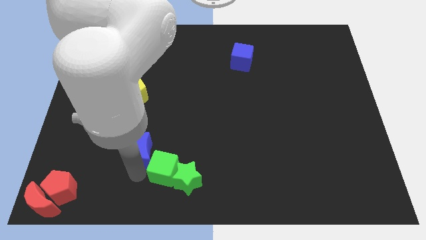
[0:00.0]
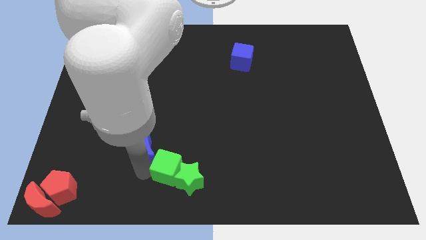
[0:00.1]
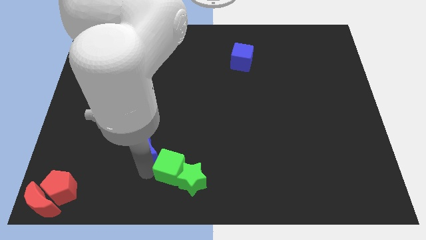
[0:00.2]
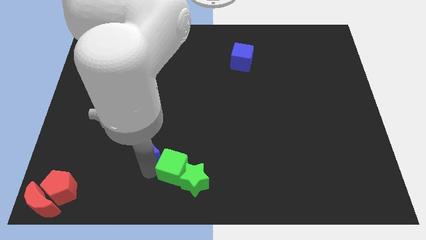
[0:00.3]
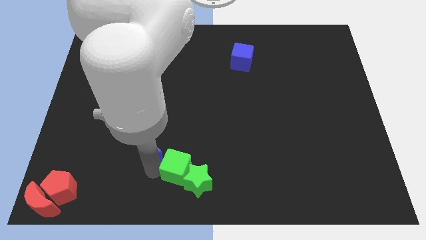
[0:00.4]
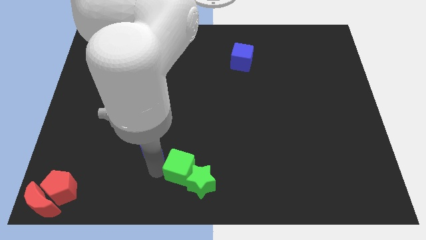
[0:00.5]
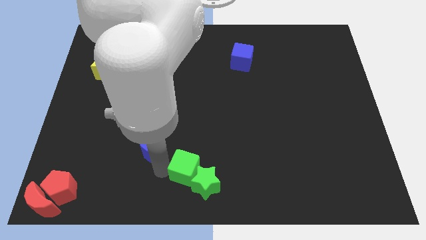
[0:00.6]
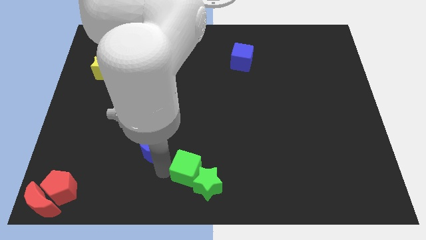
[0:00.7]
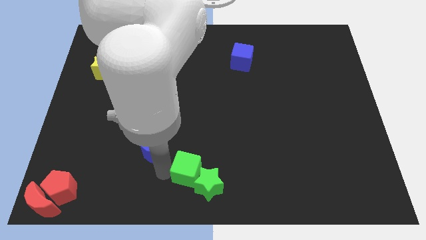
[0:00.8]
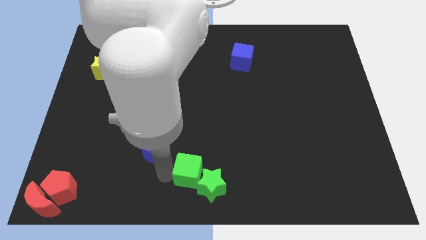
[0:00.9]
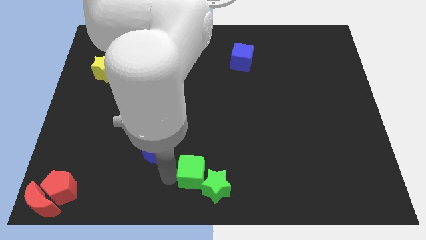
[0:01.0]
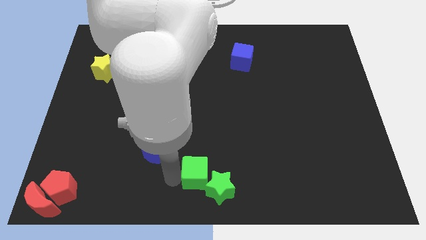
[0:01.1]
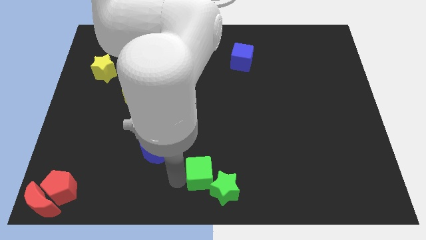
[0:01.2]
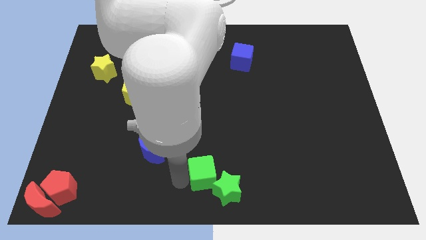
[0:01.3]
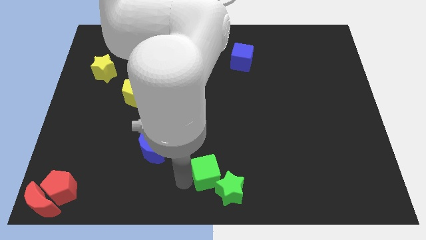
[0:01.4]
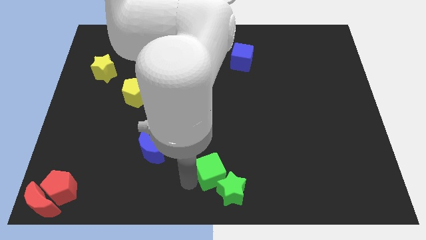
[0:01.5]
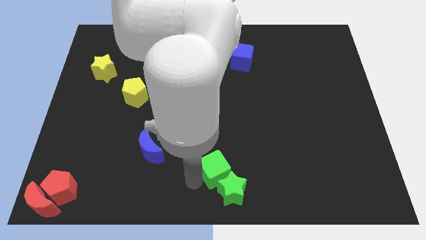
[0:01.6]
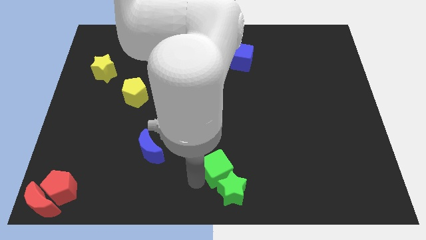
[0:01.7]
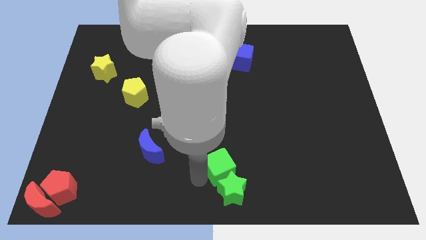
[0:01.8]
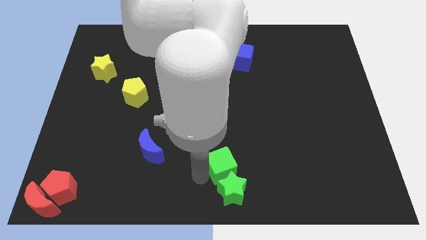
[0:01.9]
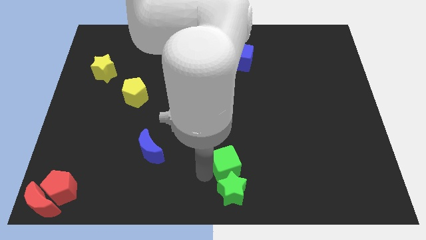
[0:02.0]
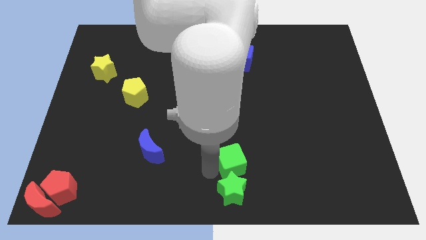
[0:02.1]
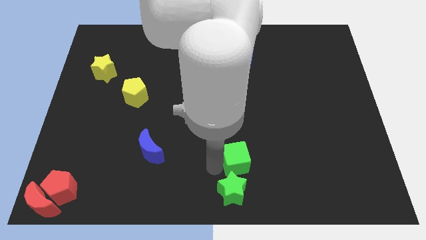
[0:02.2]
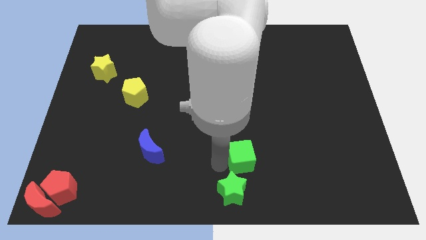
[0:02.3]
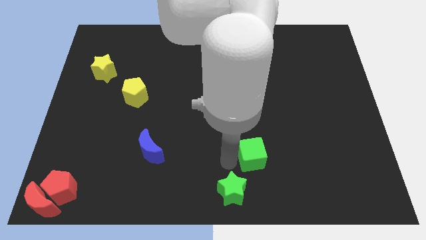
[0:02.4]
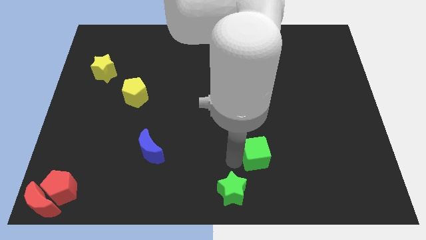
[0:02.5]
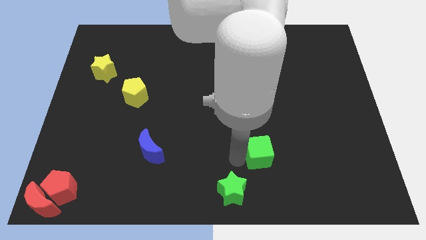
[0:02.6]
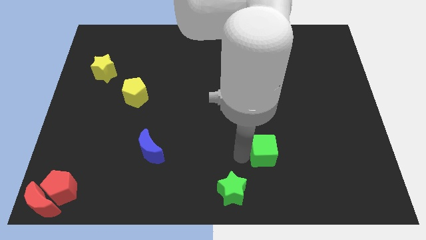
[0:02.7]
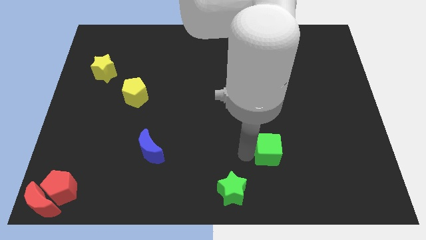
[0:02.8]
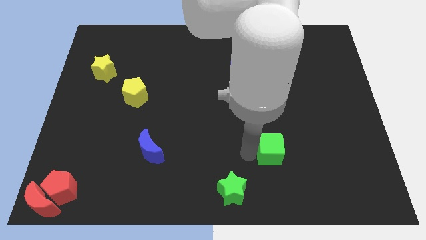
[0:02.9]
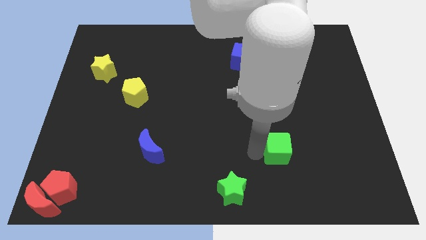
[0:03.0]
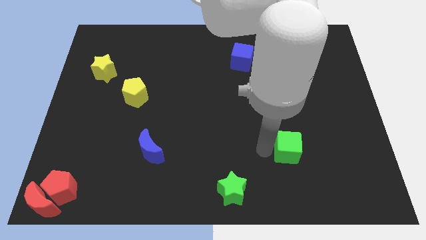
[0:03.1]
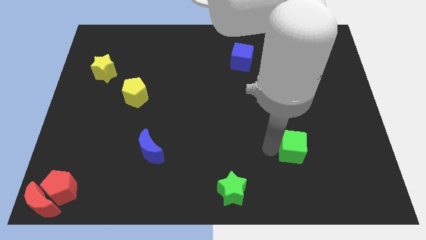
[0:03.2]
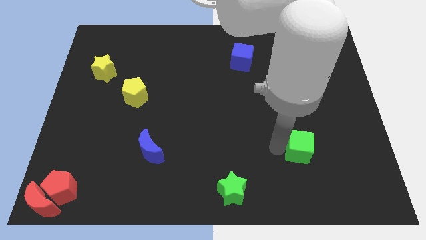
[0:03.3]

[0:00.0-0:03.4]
push the green cube to the right of the board

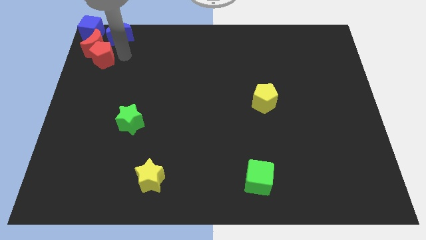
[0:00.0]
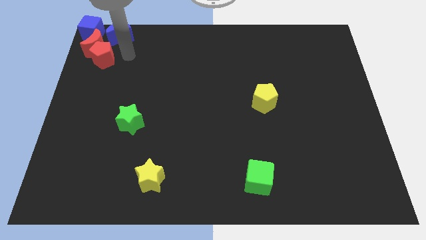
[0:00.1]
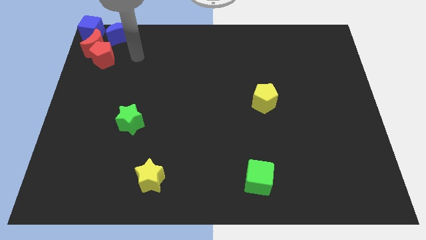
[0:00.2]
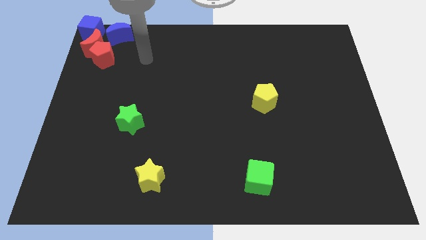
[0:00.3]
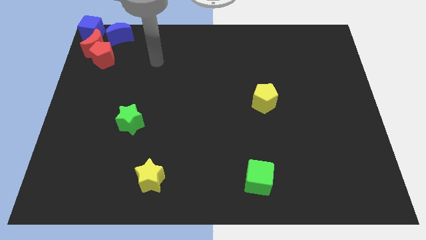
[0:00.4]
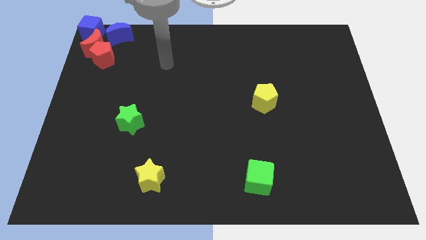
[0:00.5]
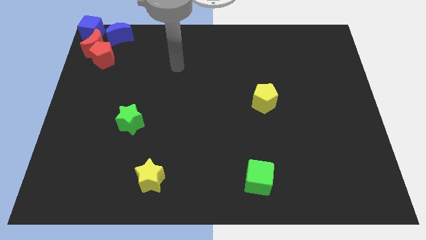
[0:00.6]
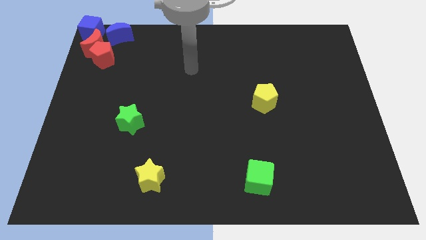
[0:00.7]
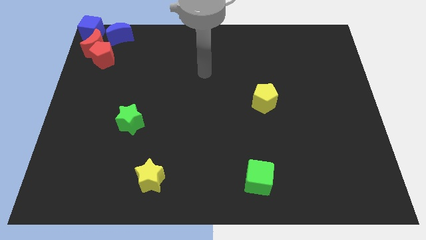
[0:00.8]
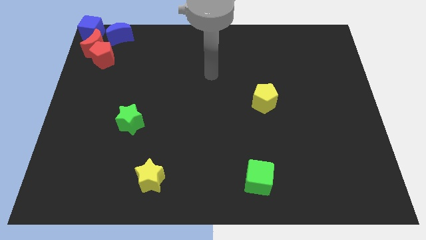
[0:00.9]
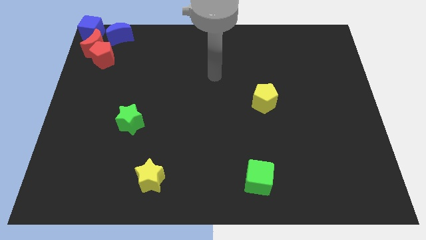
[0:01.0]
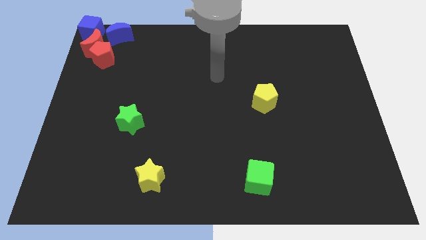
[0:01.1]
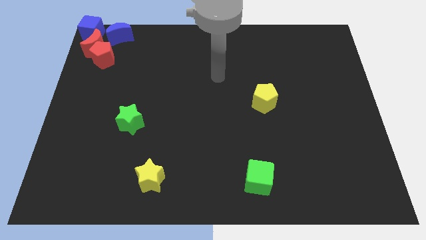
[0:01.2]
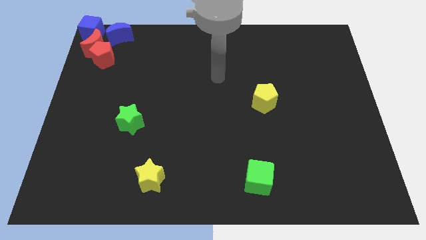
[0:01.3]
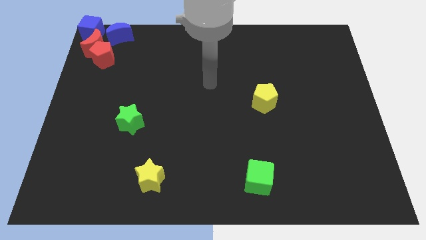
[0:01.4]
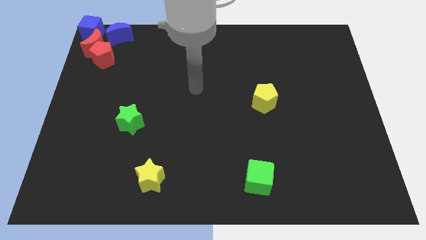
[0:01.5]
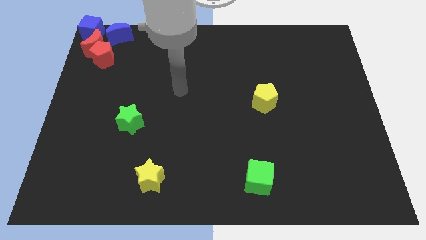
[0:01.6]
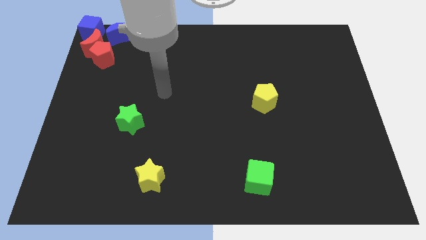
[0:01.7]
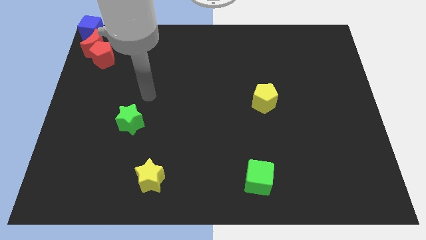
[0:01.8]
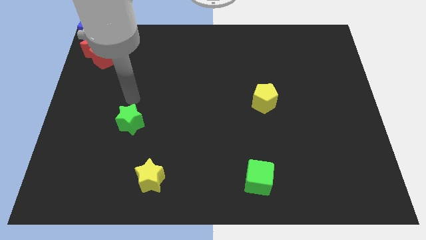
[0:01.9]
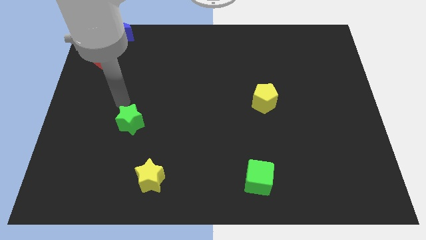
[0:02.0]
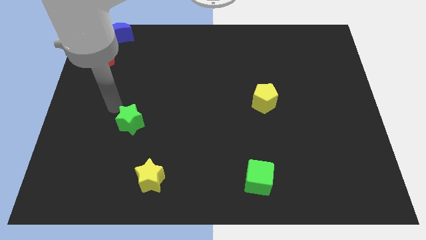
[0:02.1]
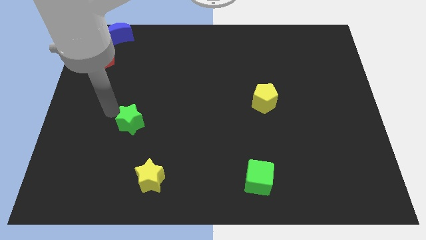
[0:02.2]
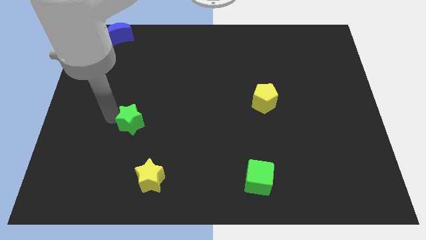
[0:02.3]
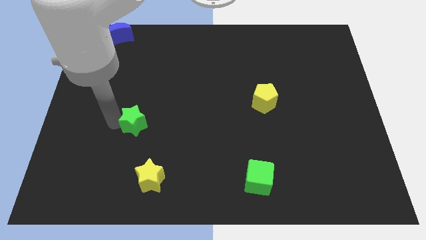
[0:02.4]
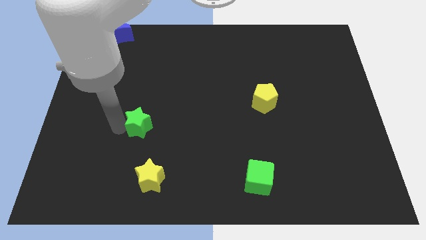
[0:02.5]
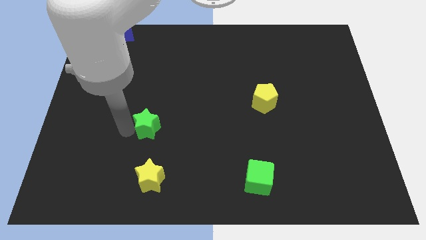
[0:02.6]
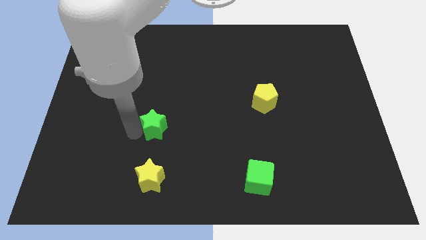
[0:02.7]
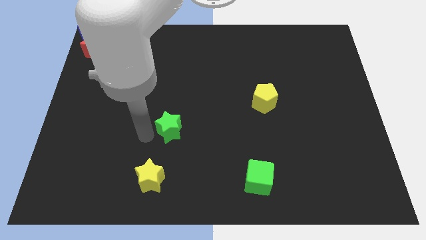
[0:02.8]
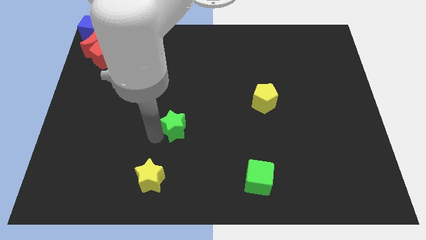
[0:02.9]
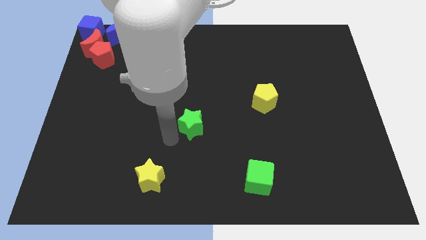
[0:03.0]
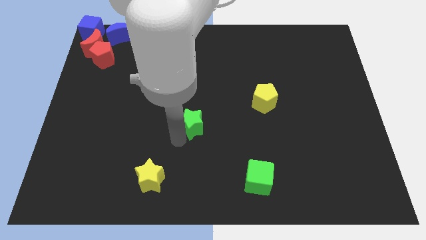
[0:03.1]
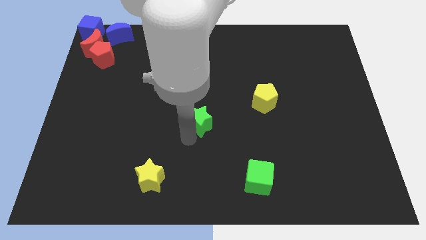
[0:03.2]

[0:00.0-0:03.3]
move the green star to the right of the board

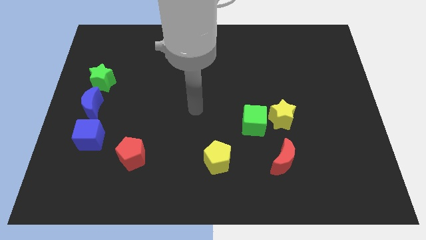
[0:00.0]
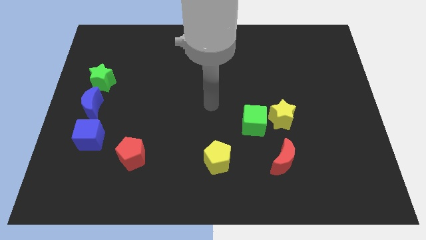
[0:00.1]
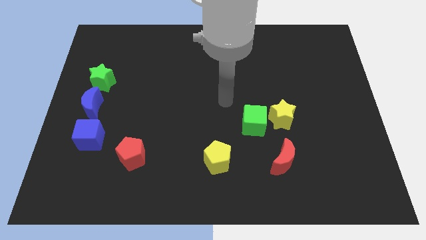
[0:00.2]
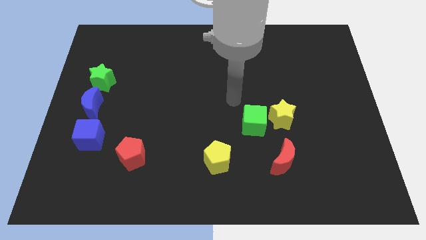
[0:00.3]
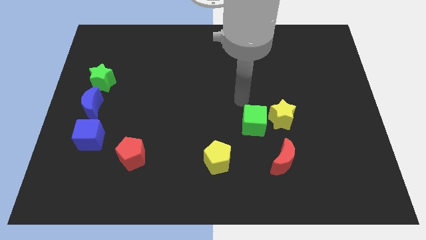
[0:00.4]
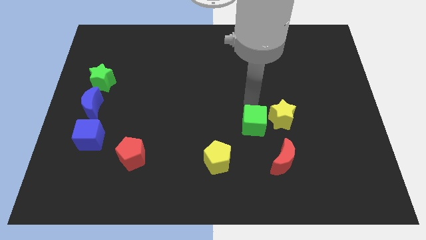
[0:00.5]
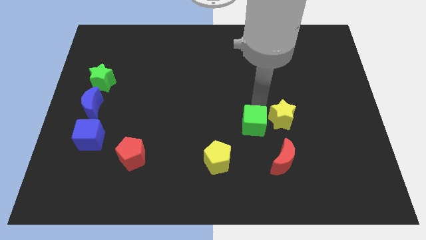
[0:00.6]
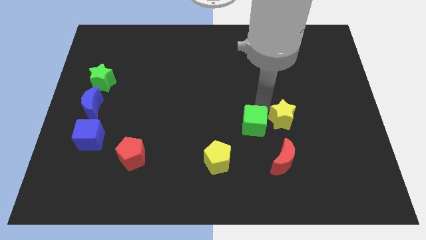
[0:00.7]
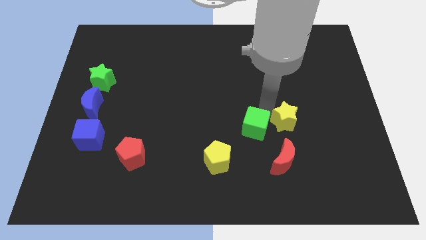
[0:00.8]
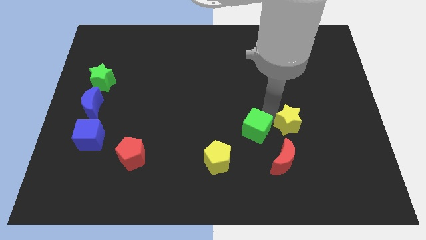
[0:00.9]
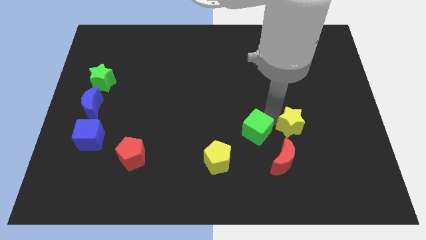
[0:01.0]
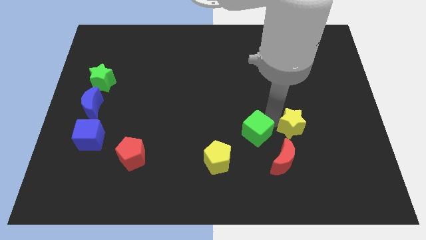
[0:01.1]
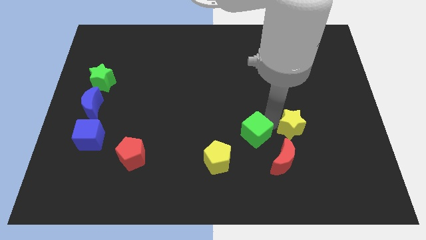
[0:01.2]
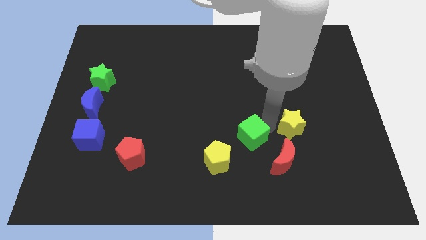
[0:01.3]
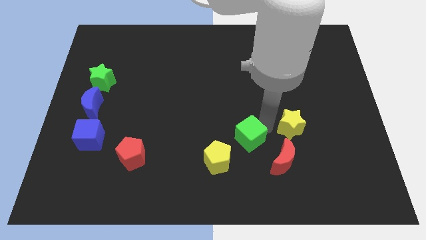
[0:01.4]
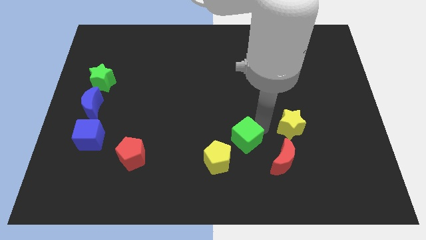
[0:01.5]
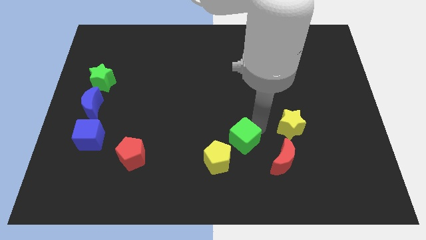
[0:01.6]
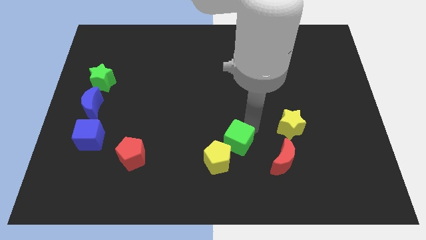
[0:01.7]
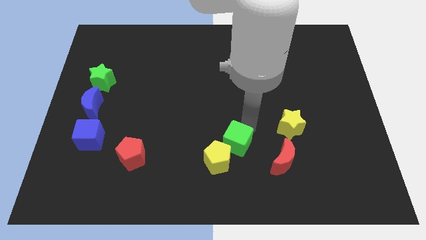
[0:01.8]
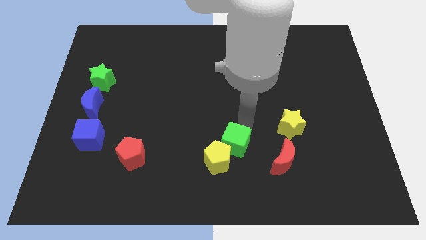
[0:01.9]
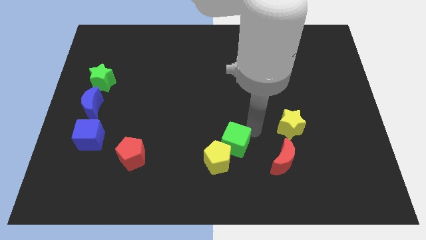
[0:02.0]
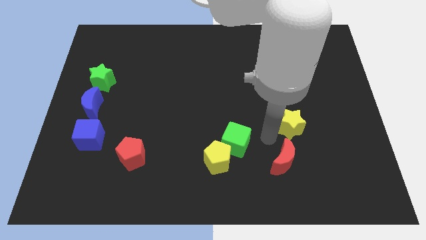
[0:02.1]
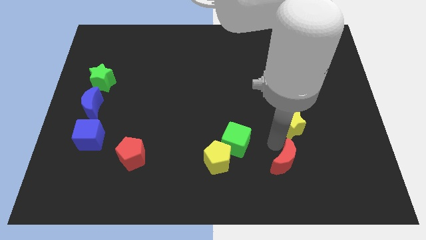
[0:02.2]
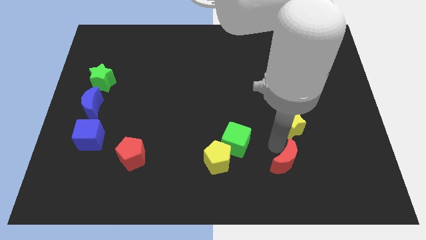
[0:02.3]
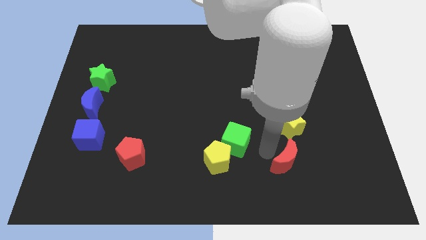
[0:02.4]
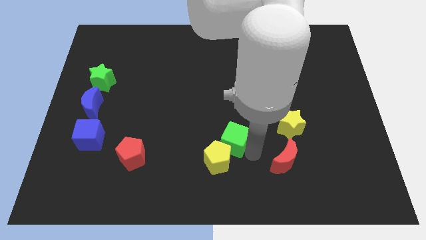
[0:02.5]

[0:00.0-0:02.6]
place the green cube in between blue moon and yellow star
